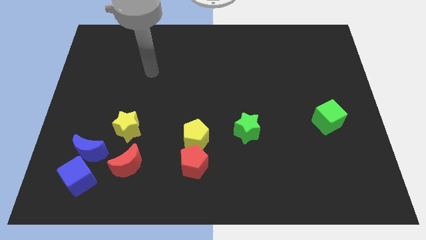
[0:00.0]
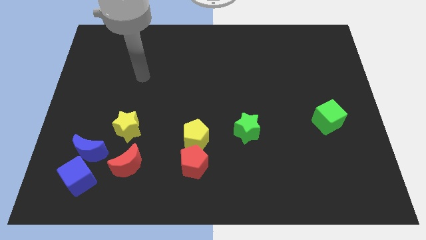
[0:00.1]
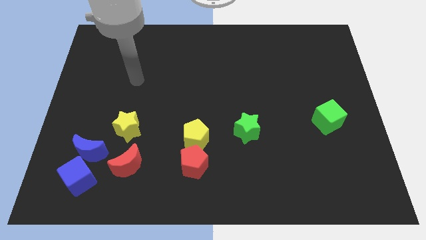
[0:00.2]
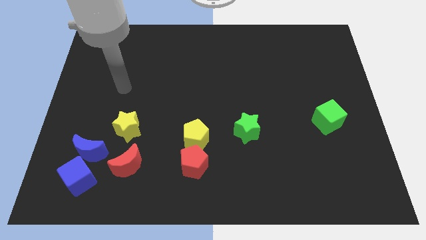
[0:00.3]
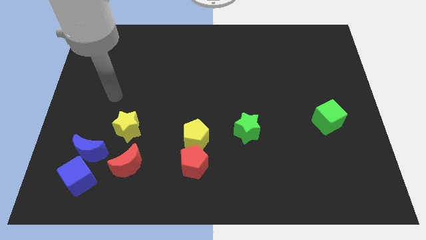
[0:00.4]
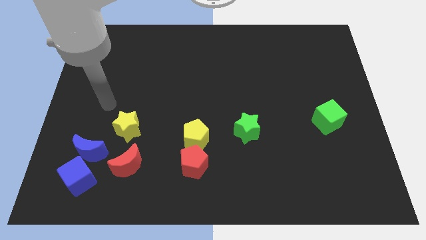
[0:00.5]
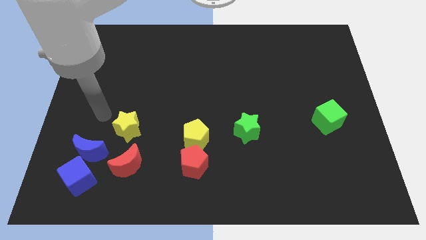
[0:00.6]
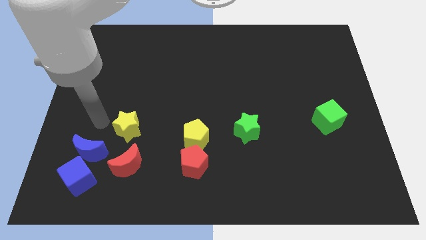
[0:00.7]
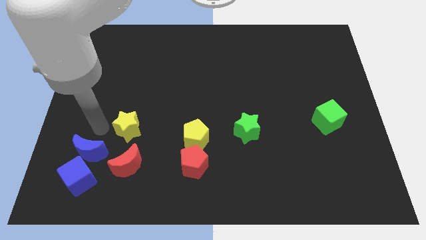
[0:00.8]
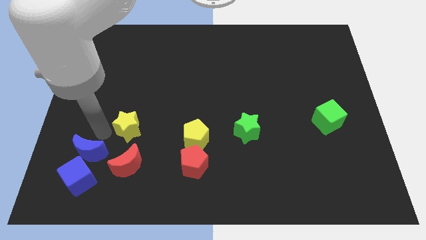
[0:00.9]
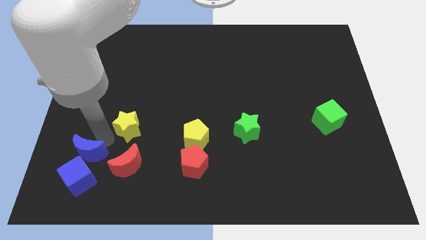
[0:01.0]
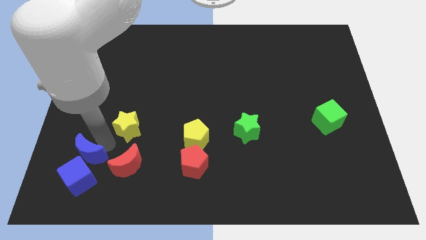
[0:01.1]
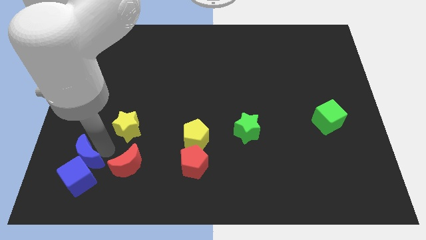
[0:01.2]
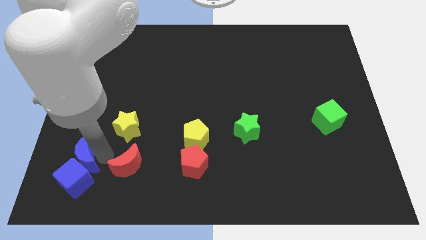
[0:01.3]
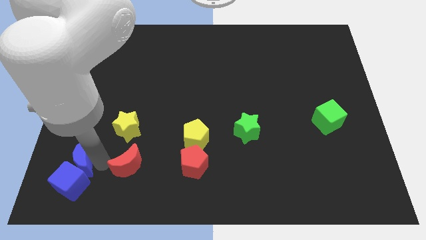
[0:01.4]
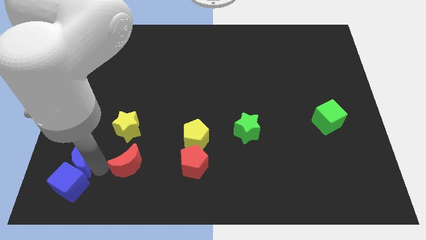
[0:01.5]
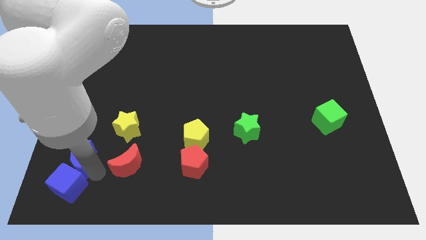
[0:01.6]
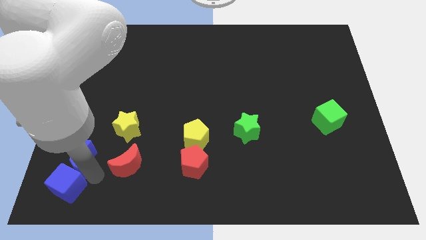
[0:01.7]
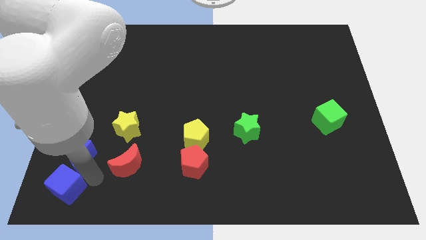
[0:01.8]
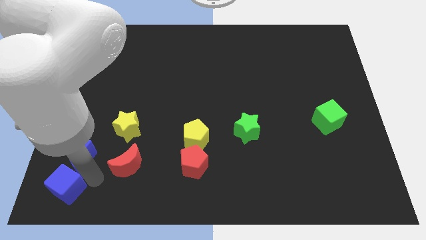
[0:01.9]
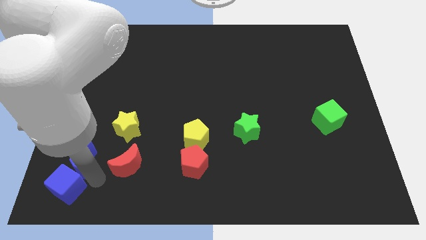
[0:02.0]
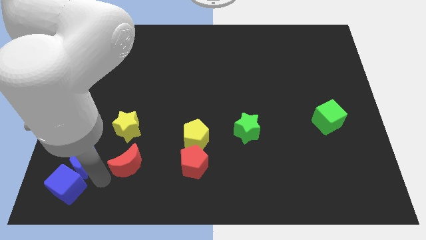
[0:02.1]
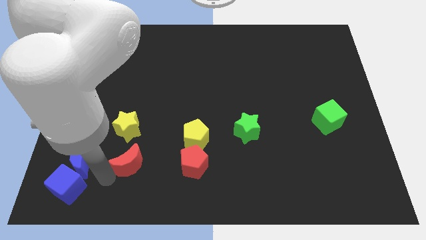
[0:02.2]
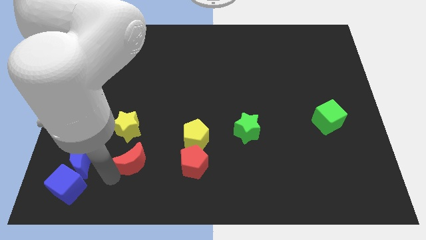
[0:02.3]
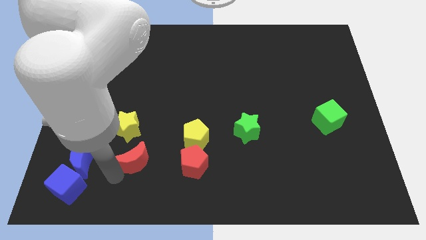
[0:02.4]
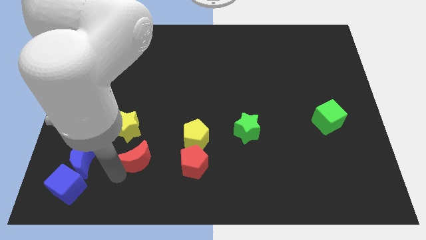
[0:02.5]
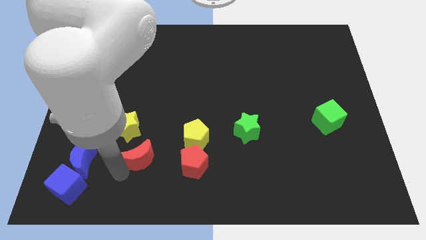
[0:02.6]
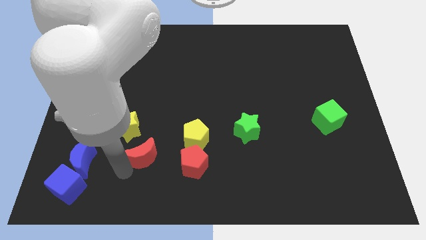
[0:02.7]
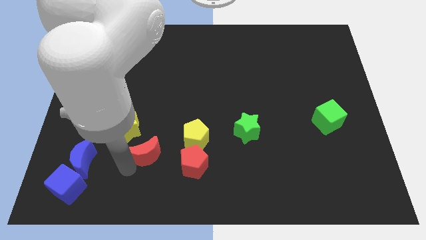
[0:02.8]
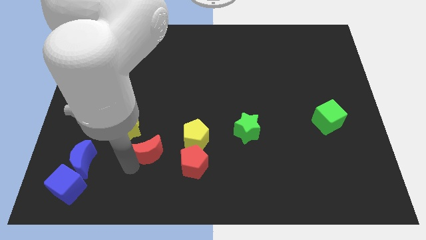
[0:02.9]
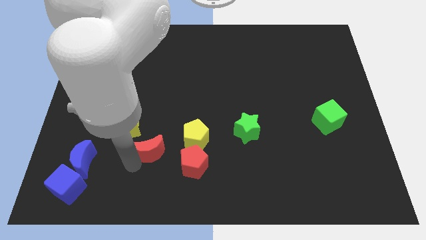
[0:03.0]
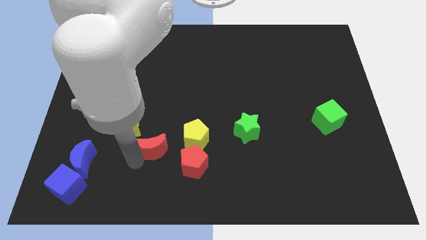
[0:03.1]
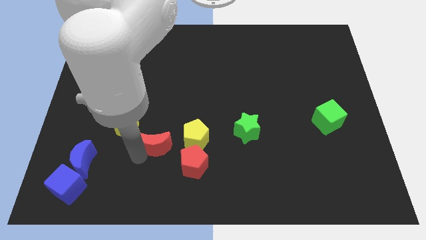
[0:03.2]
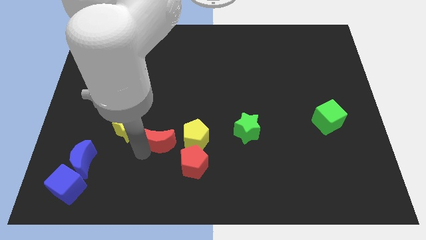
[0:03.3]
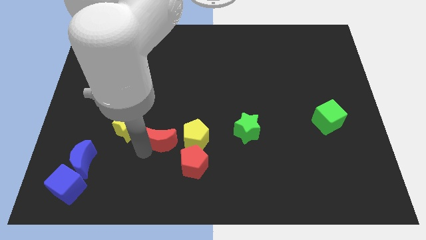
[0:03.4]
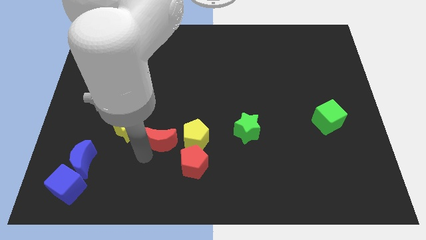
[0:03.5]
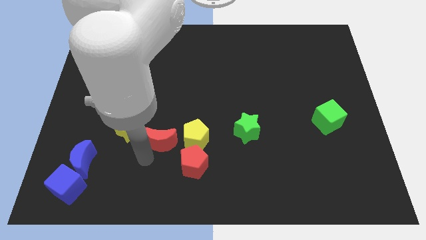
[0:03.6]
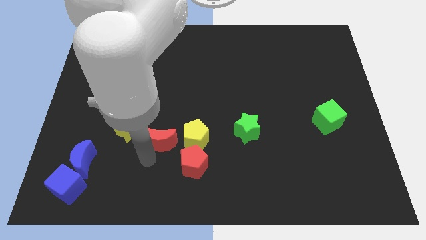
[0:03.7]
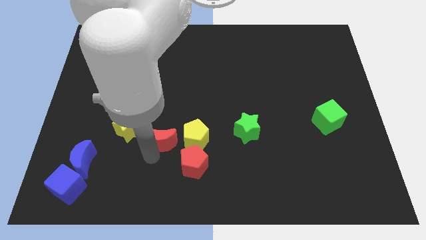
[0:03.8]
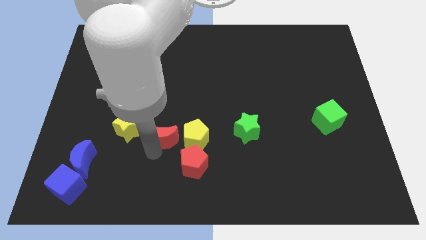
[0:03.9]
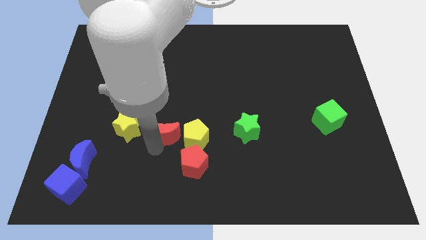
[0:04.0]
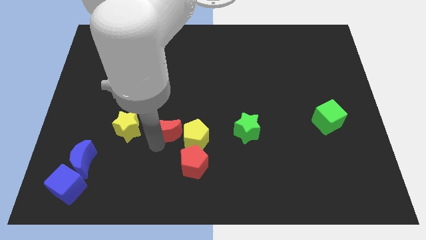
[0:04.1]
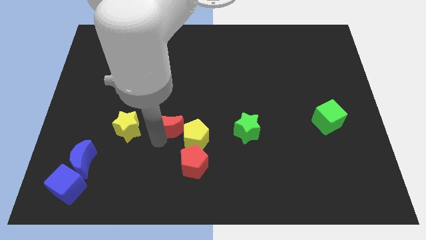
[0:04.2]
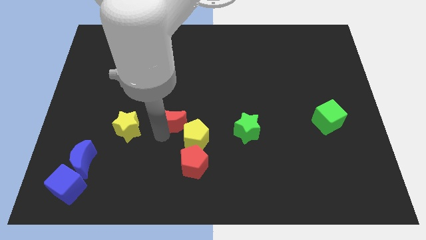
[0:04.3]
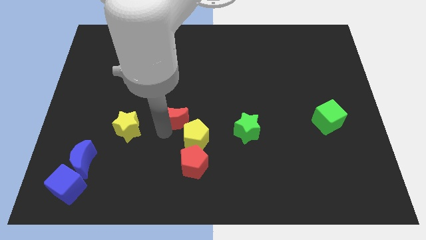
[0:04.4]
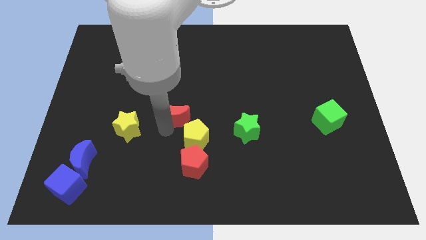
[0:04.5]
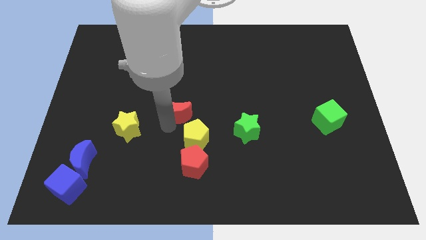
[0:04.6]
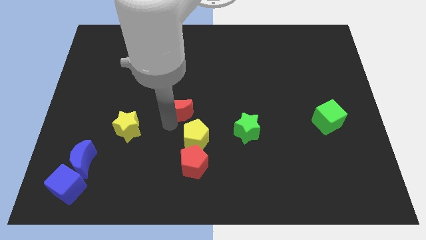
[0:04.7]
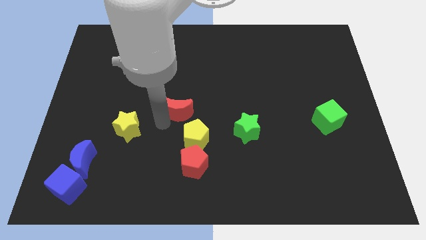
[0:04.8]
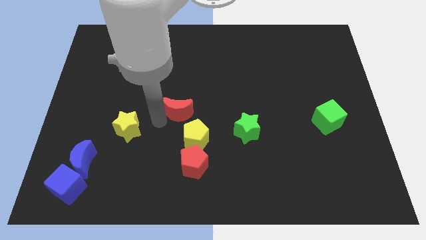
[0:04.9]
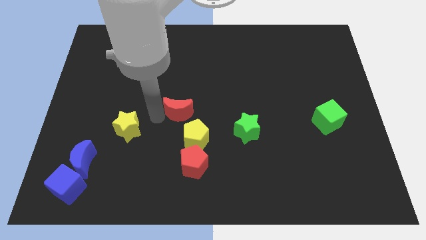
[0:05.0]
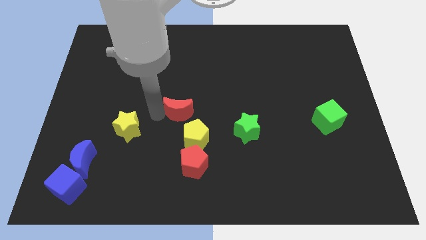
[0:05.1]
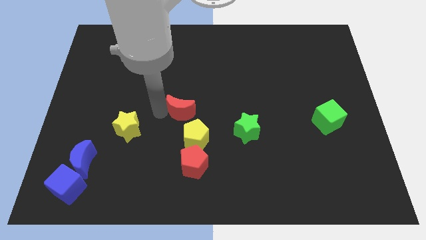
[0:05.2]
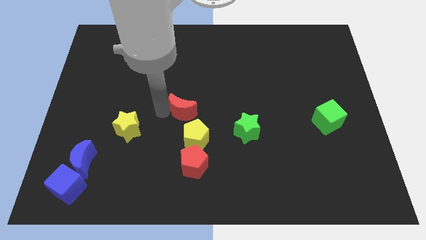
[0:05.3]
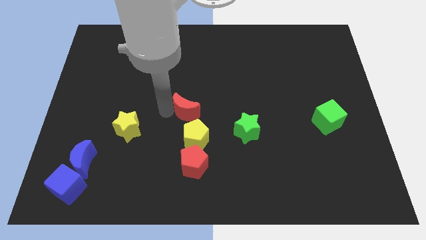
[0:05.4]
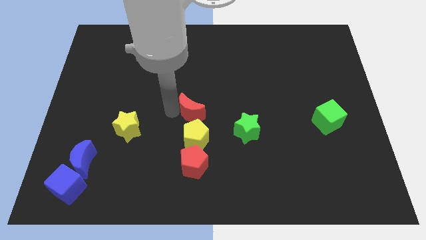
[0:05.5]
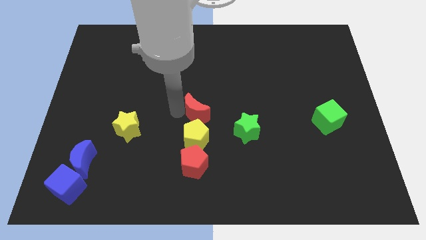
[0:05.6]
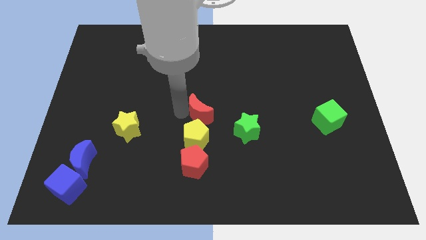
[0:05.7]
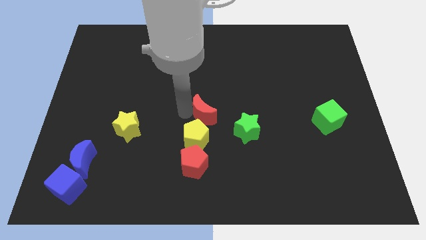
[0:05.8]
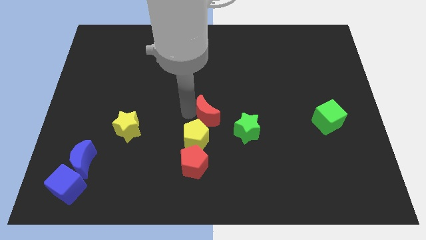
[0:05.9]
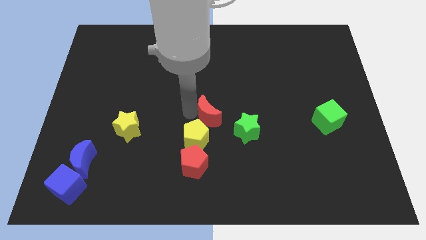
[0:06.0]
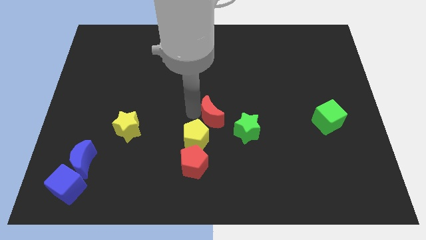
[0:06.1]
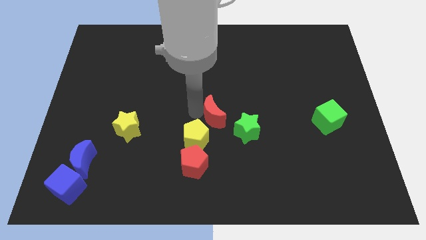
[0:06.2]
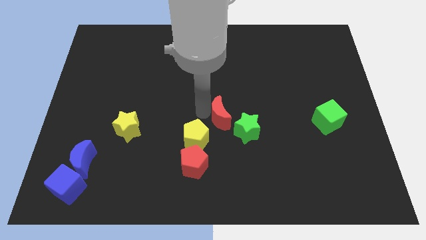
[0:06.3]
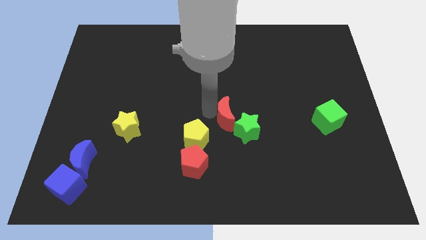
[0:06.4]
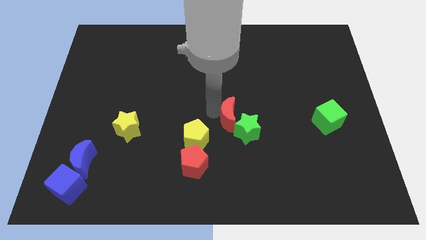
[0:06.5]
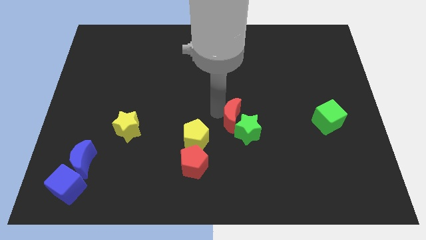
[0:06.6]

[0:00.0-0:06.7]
slide the red moon close to the green star

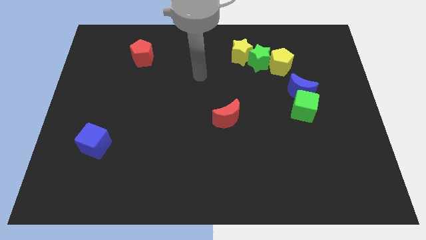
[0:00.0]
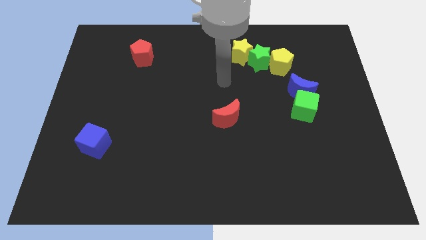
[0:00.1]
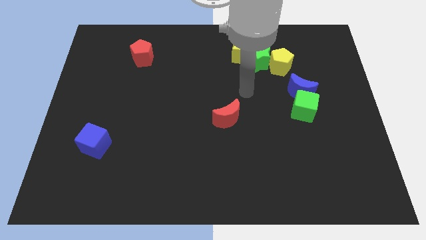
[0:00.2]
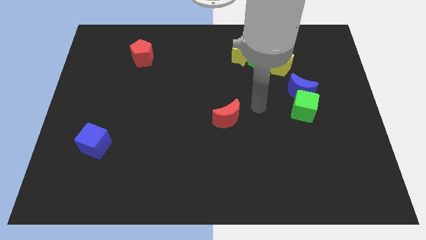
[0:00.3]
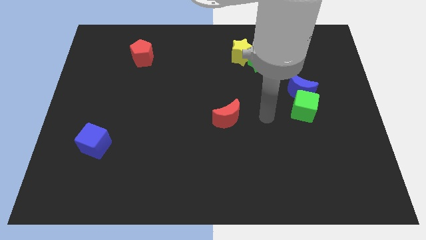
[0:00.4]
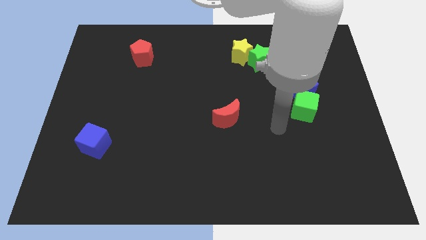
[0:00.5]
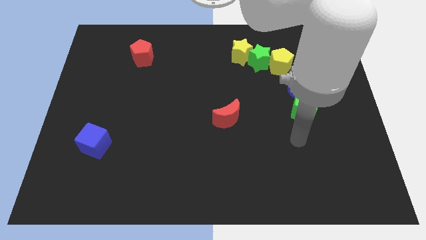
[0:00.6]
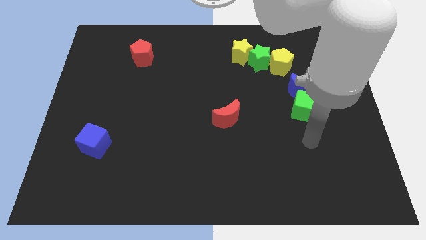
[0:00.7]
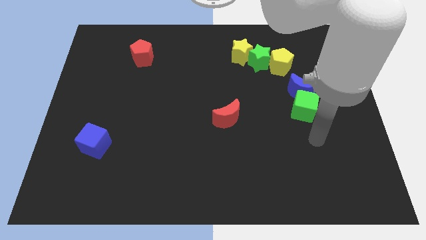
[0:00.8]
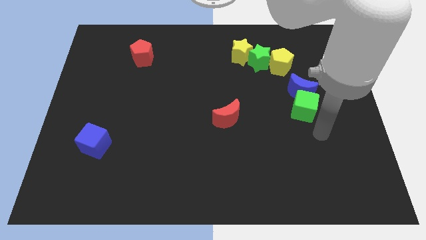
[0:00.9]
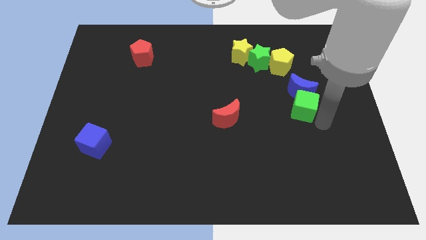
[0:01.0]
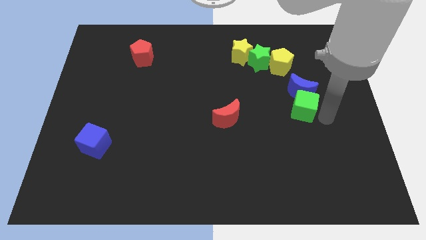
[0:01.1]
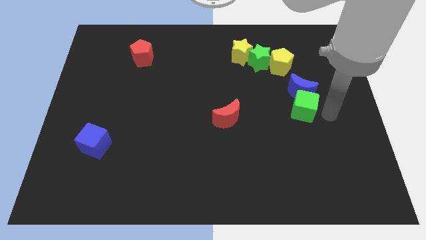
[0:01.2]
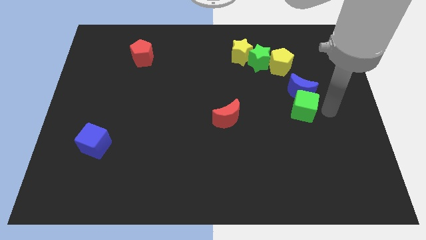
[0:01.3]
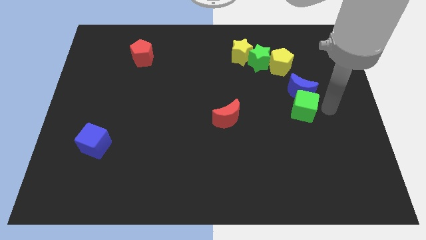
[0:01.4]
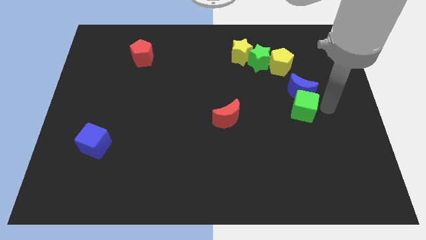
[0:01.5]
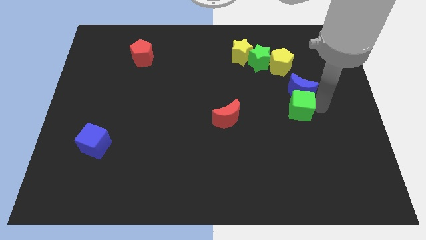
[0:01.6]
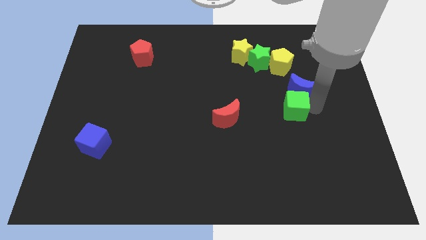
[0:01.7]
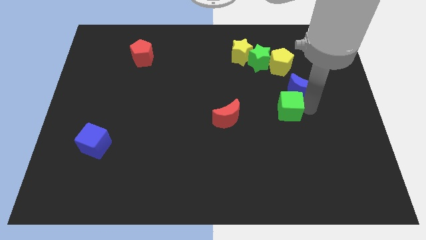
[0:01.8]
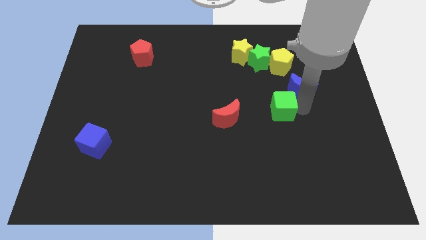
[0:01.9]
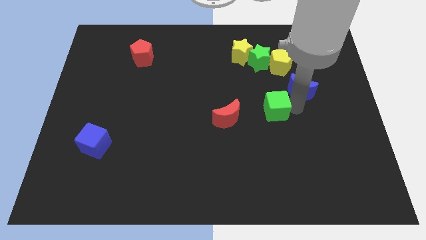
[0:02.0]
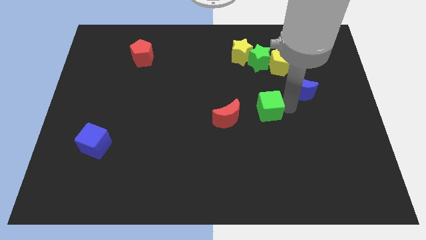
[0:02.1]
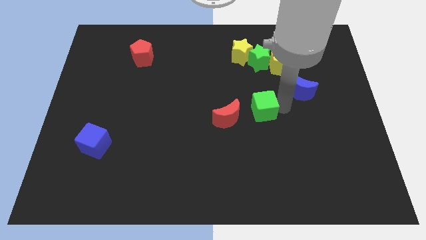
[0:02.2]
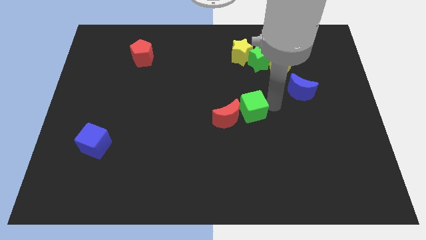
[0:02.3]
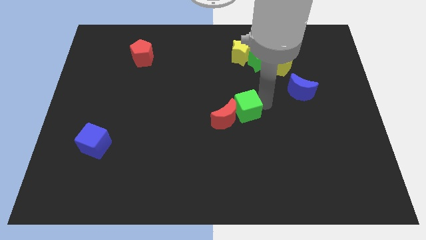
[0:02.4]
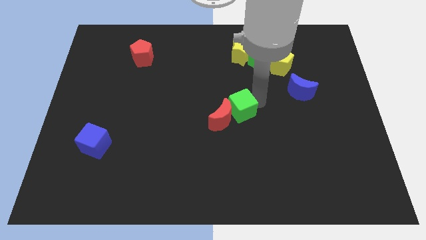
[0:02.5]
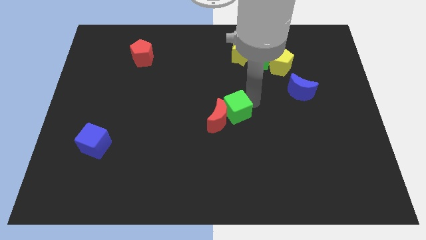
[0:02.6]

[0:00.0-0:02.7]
push the green cube to the red moon
